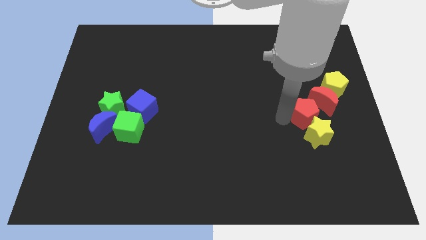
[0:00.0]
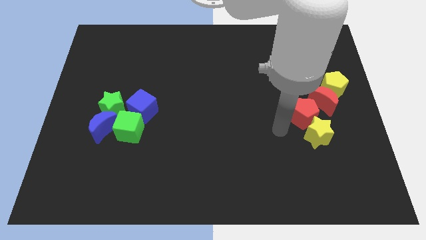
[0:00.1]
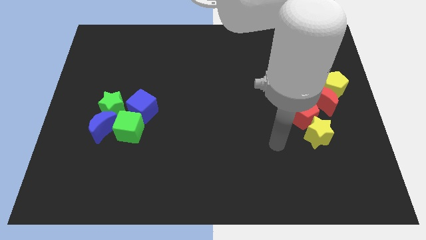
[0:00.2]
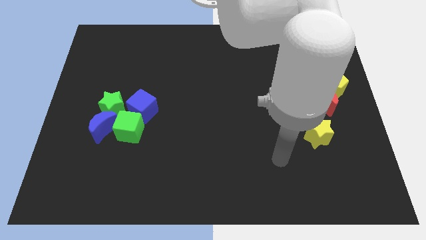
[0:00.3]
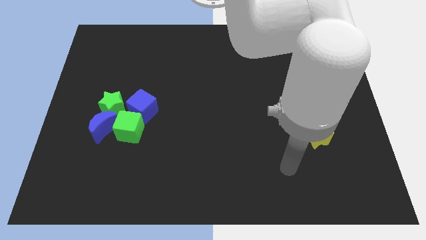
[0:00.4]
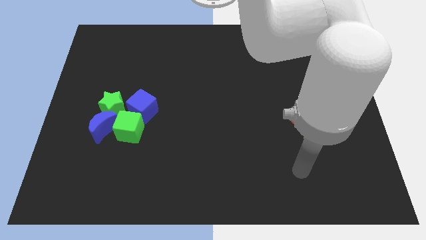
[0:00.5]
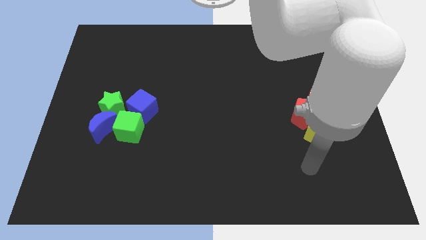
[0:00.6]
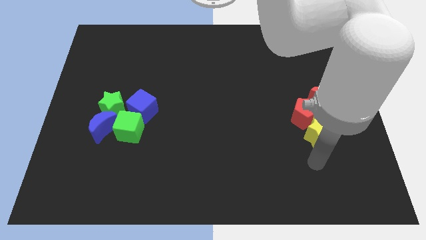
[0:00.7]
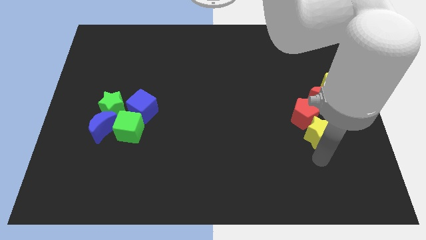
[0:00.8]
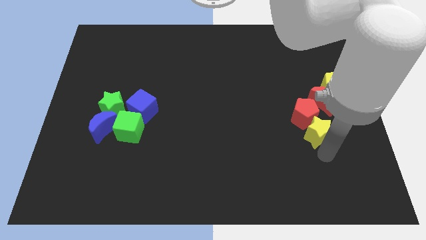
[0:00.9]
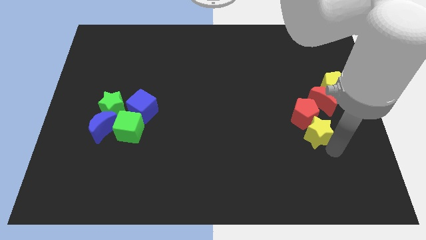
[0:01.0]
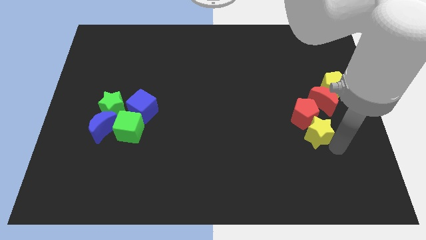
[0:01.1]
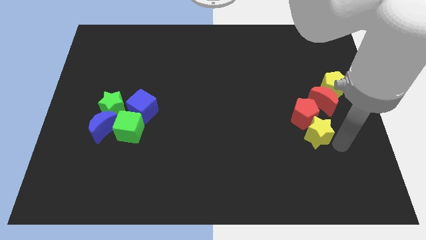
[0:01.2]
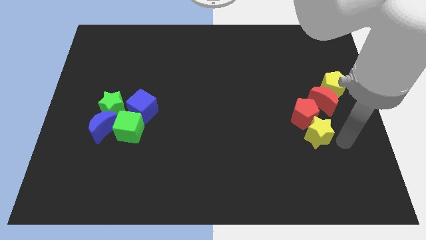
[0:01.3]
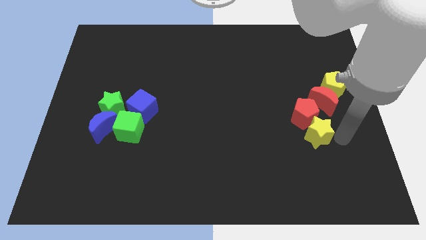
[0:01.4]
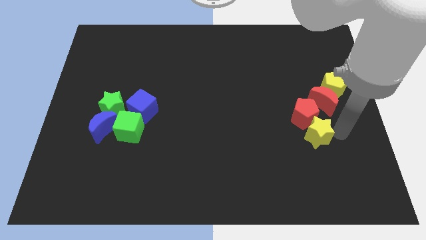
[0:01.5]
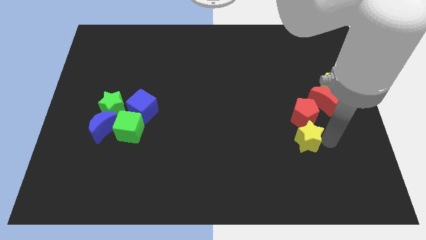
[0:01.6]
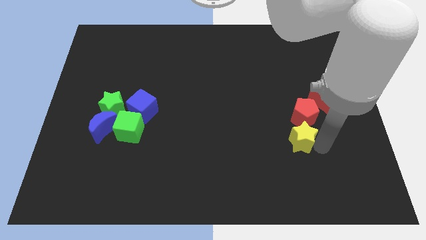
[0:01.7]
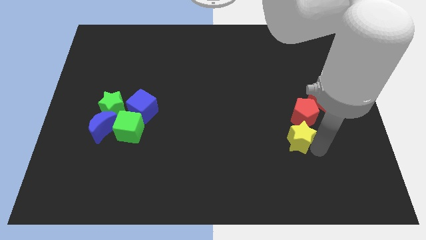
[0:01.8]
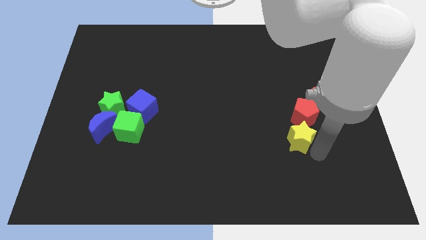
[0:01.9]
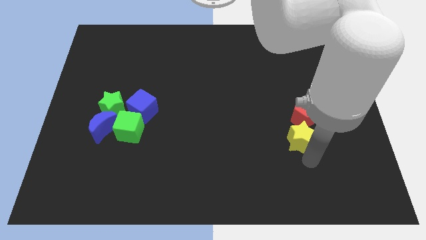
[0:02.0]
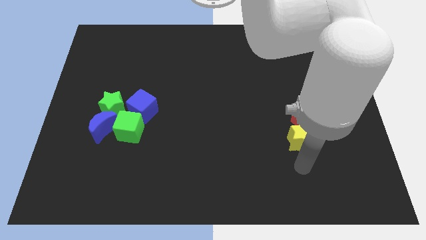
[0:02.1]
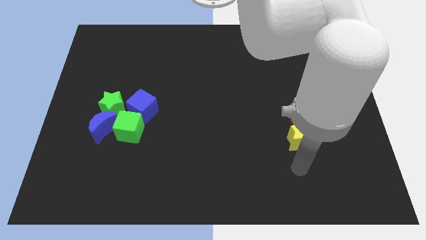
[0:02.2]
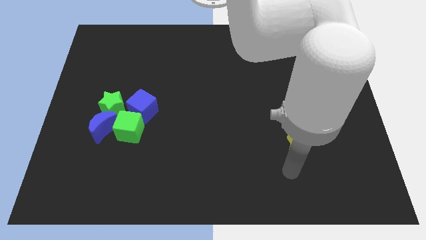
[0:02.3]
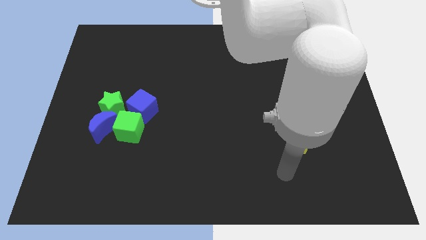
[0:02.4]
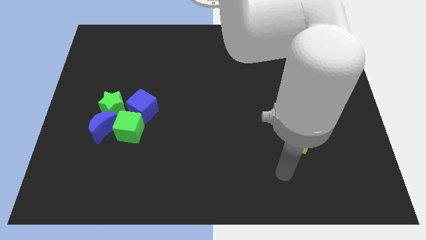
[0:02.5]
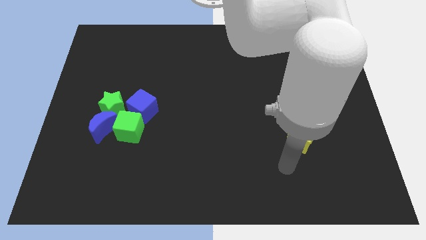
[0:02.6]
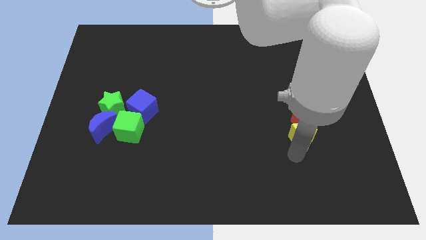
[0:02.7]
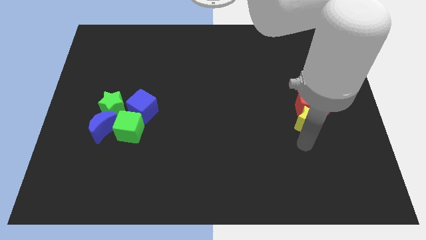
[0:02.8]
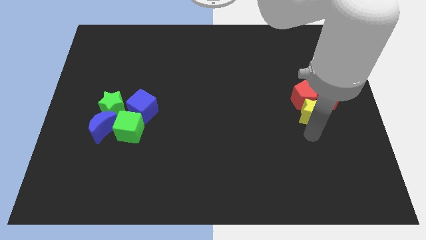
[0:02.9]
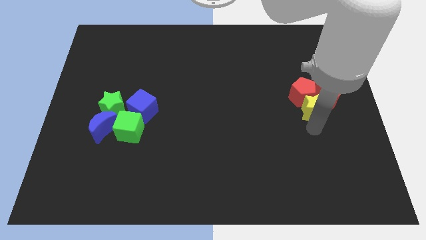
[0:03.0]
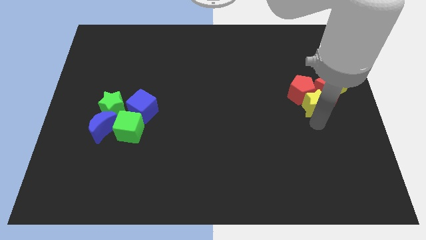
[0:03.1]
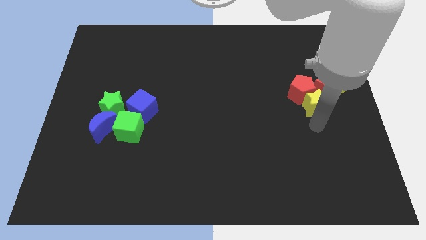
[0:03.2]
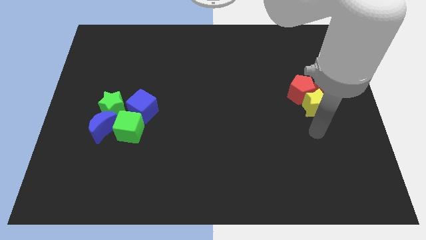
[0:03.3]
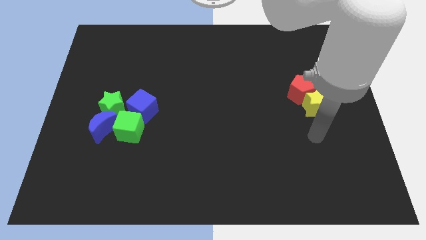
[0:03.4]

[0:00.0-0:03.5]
move yellow star and red pentagon slightly up

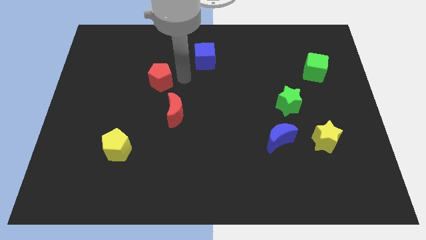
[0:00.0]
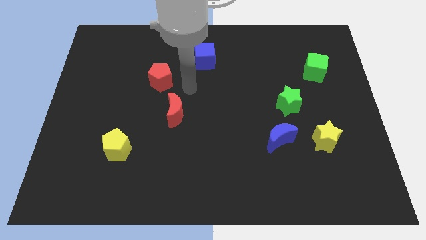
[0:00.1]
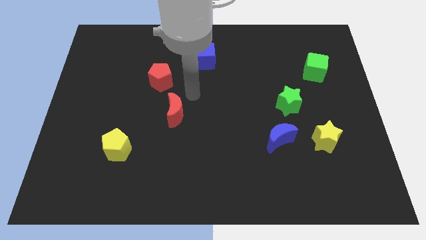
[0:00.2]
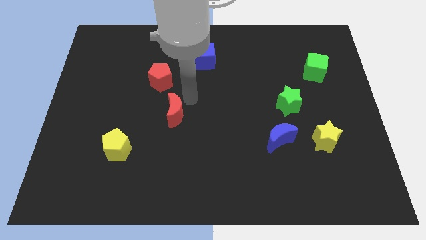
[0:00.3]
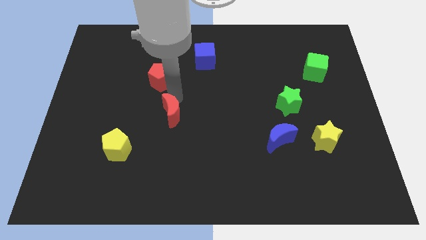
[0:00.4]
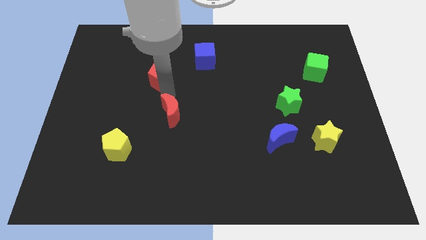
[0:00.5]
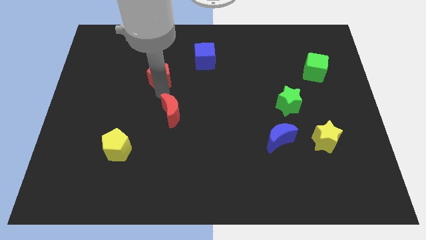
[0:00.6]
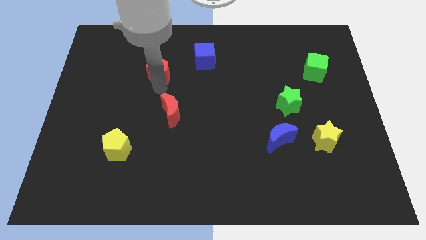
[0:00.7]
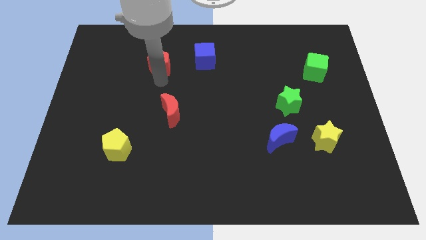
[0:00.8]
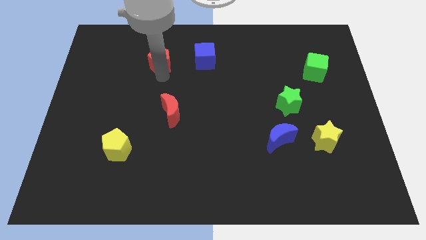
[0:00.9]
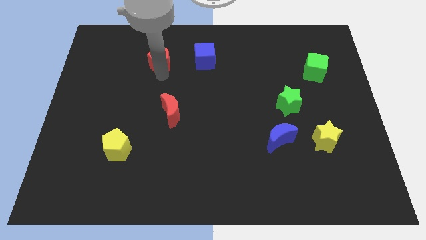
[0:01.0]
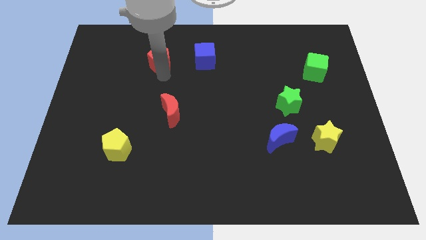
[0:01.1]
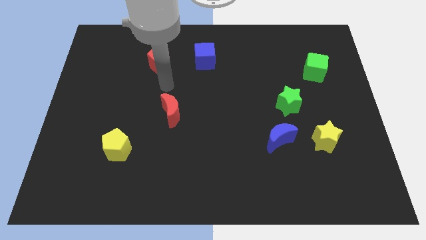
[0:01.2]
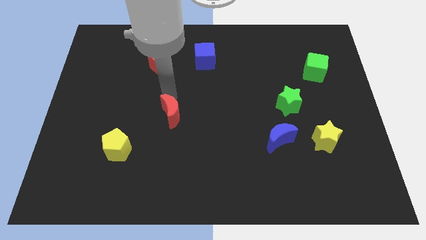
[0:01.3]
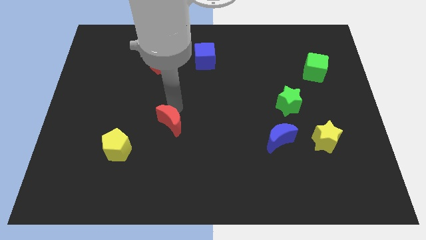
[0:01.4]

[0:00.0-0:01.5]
move the red pentagon to the left of the blue cube

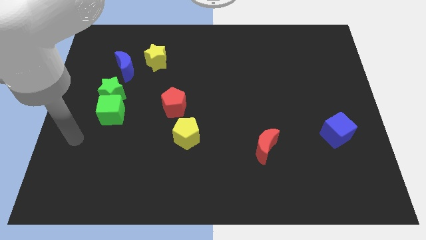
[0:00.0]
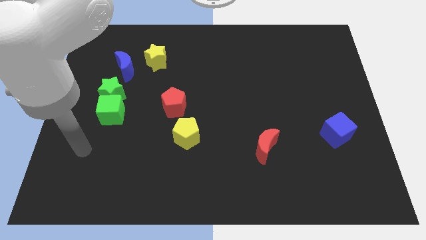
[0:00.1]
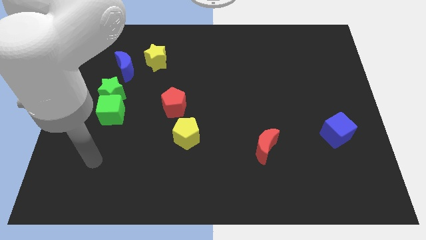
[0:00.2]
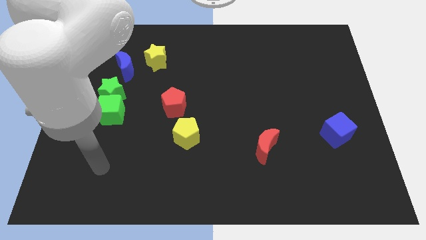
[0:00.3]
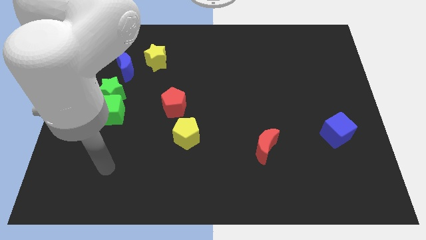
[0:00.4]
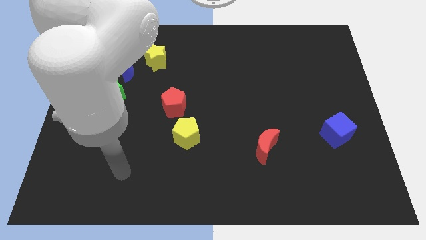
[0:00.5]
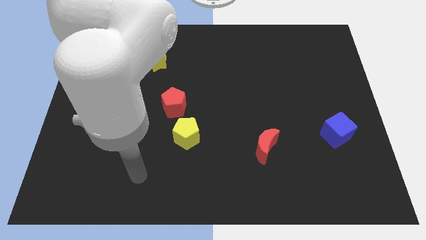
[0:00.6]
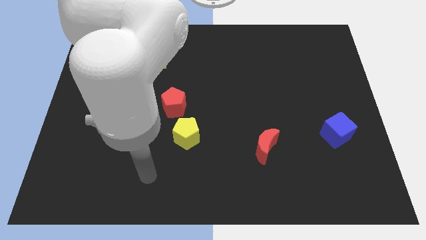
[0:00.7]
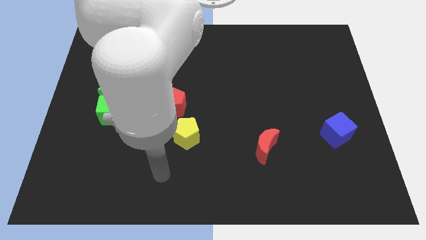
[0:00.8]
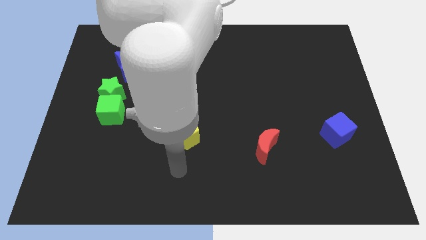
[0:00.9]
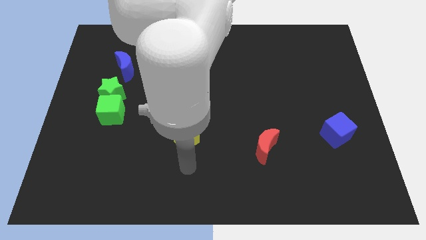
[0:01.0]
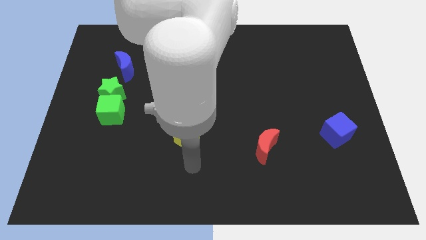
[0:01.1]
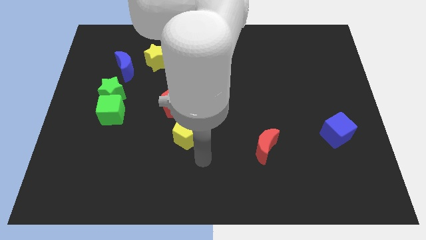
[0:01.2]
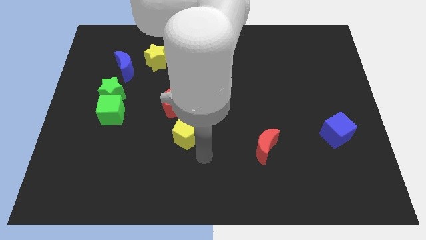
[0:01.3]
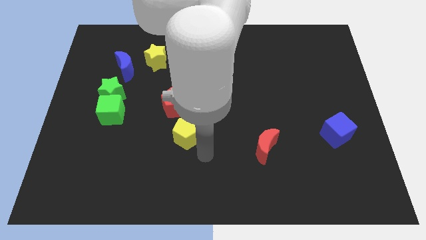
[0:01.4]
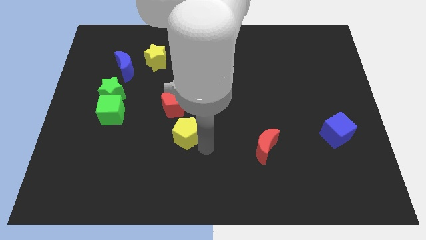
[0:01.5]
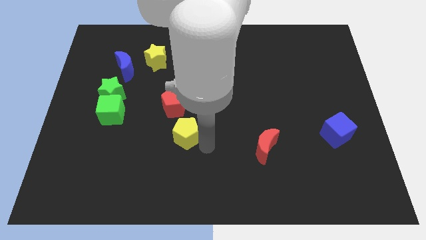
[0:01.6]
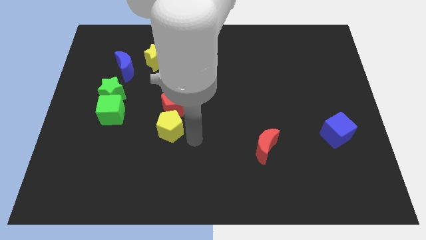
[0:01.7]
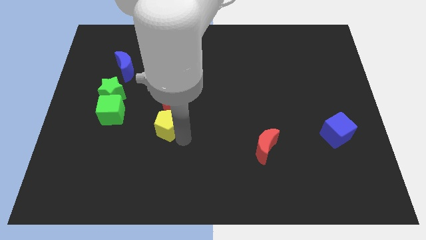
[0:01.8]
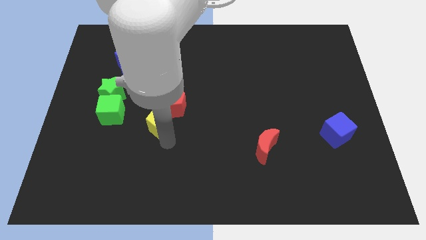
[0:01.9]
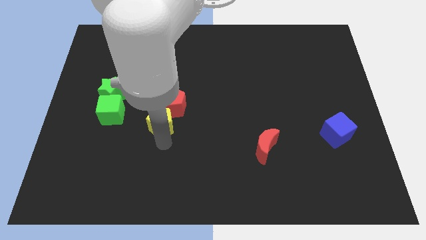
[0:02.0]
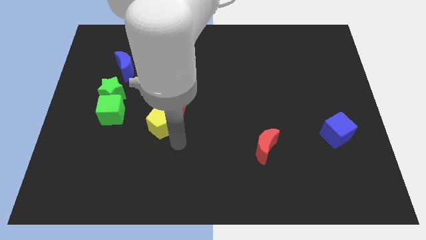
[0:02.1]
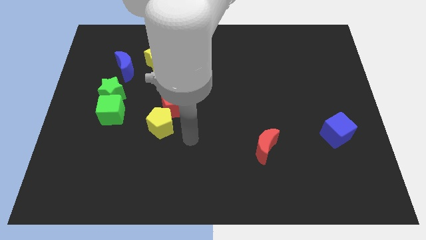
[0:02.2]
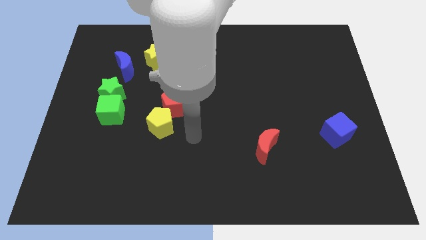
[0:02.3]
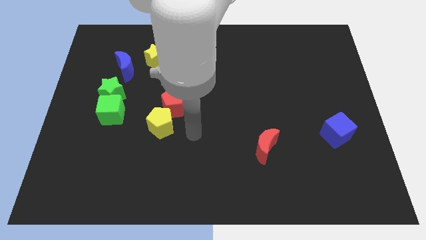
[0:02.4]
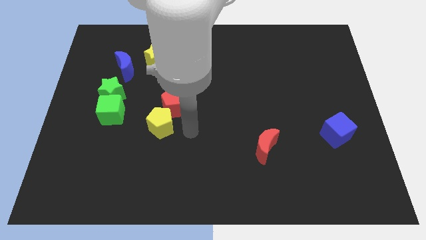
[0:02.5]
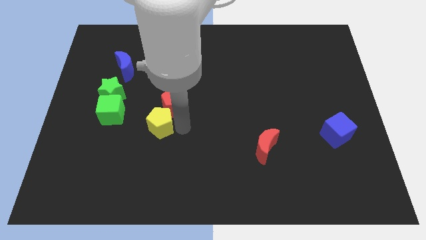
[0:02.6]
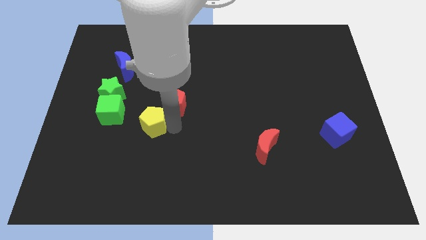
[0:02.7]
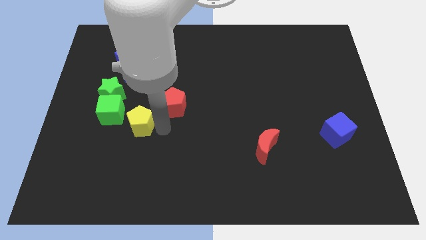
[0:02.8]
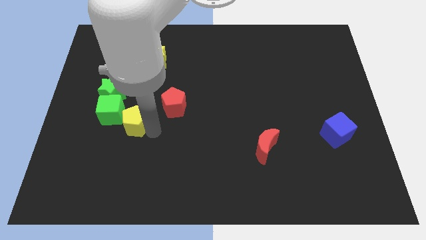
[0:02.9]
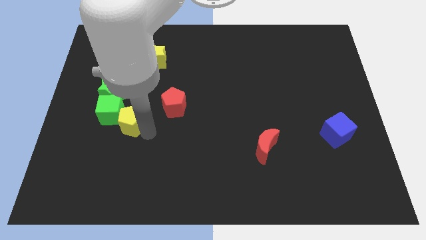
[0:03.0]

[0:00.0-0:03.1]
push the yellow pentagon into the right side of the green cube

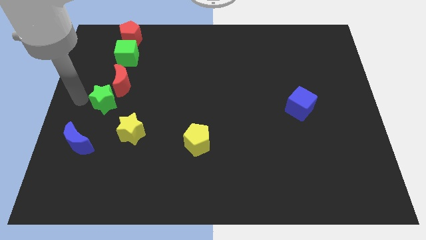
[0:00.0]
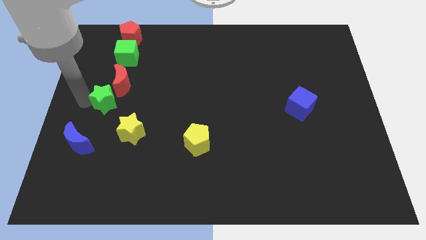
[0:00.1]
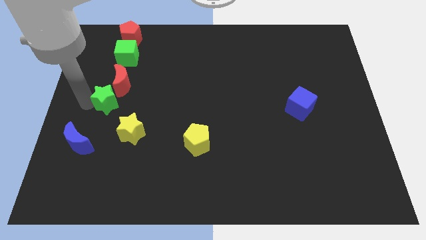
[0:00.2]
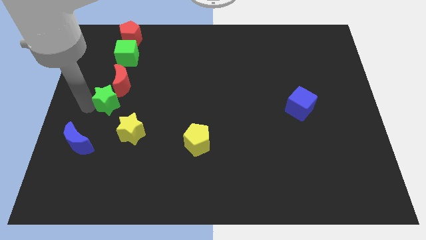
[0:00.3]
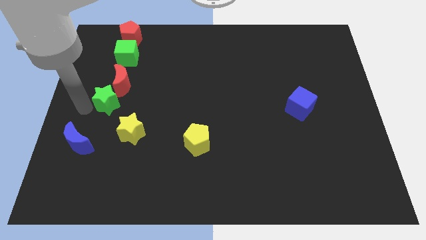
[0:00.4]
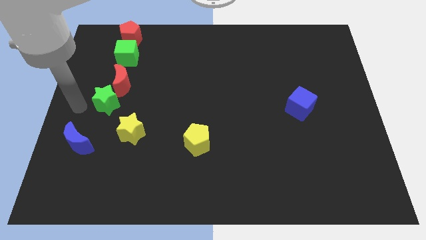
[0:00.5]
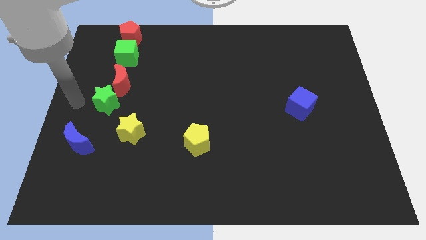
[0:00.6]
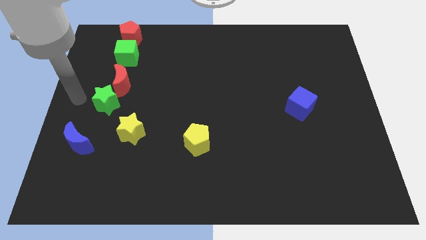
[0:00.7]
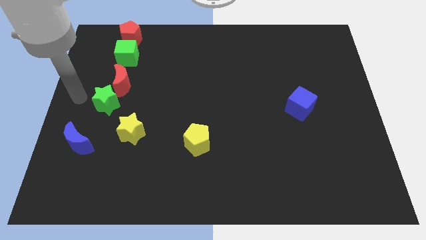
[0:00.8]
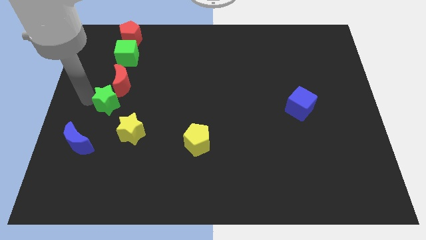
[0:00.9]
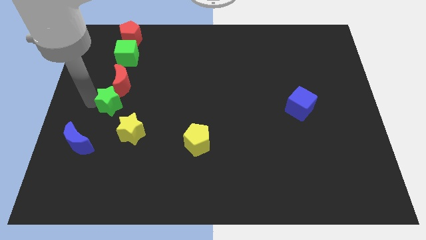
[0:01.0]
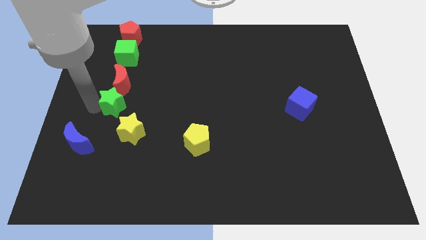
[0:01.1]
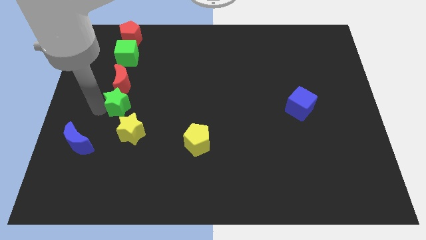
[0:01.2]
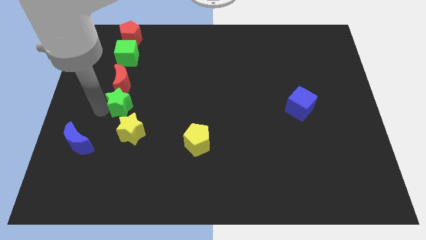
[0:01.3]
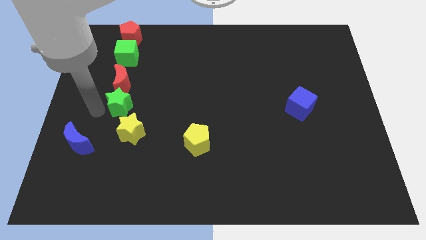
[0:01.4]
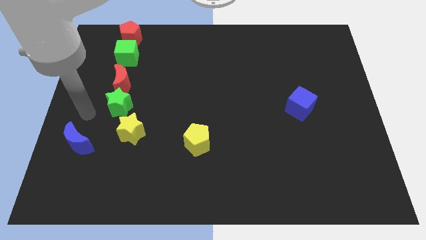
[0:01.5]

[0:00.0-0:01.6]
move the green star below the red crescent
